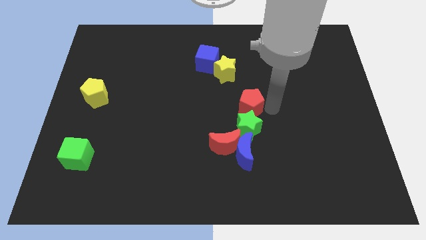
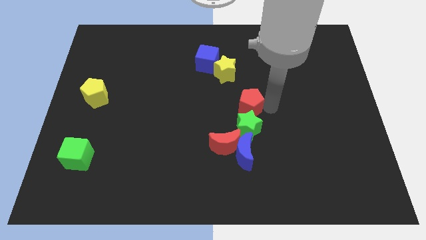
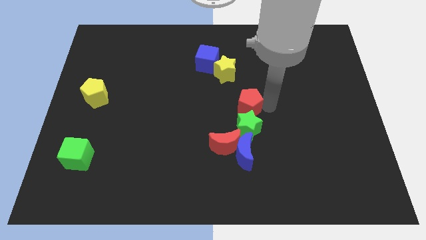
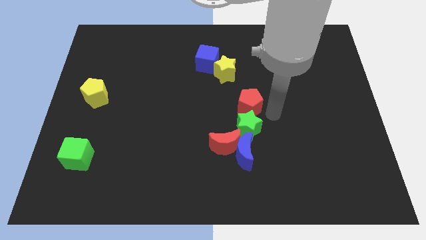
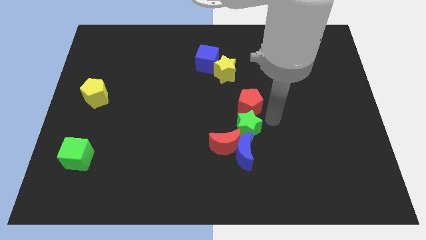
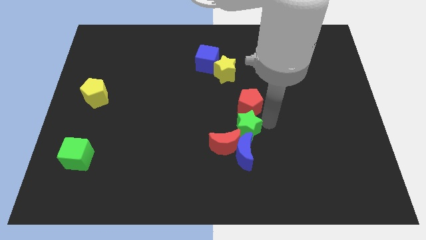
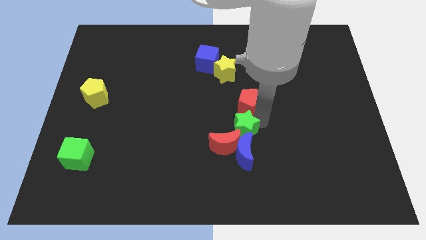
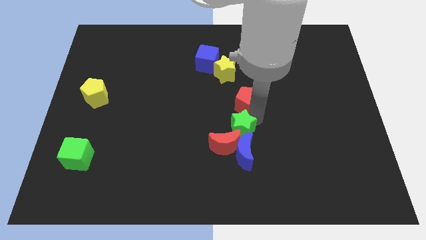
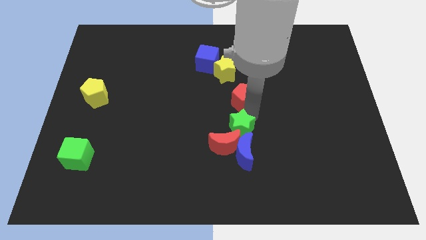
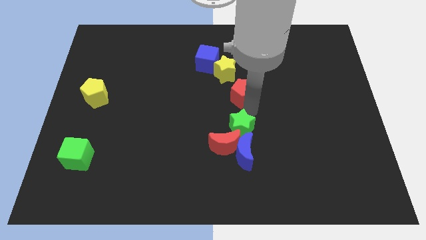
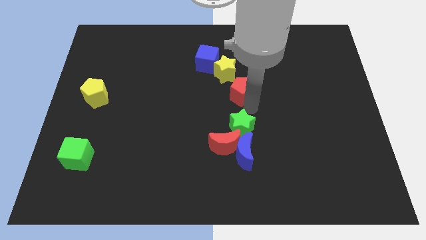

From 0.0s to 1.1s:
separate red pentagon and green star

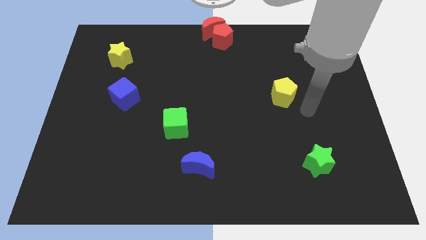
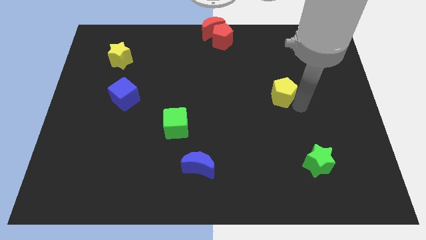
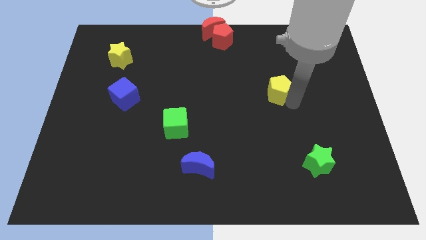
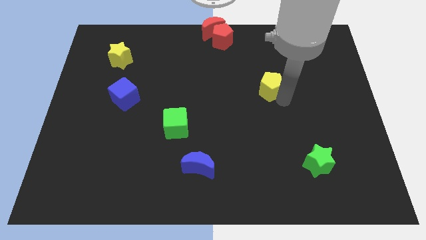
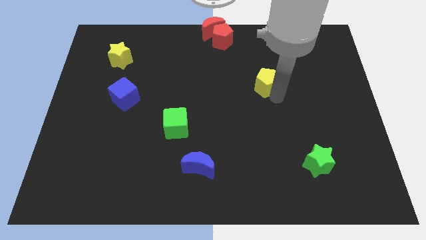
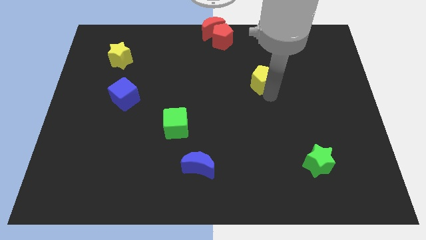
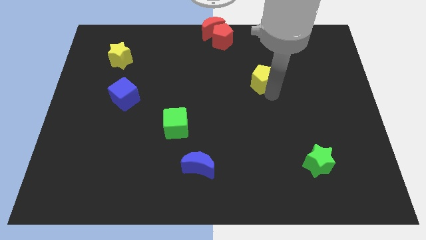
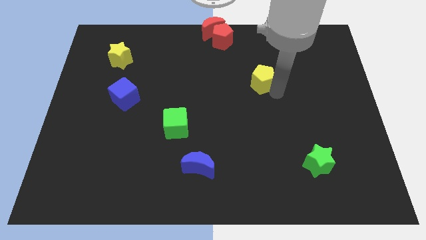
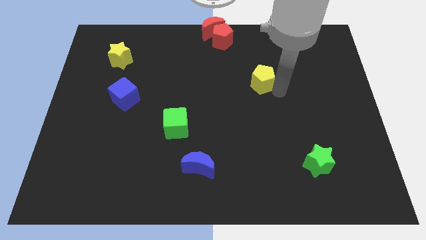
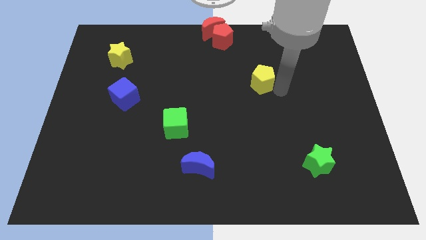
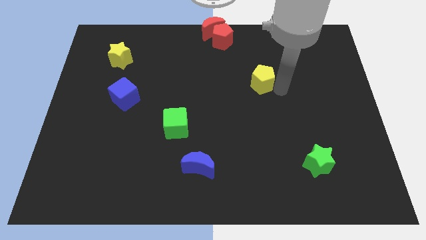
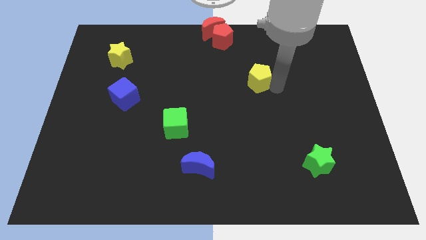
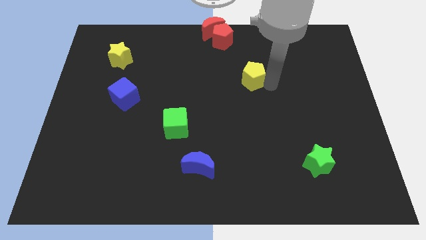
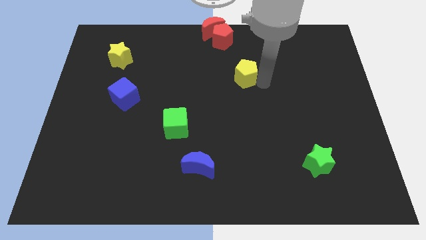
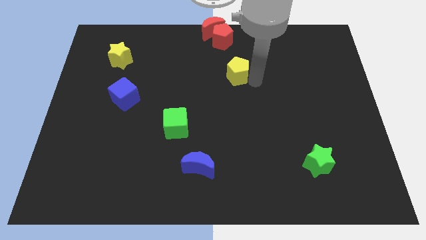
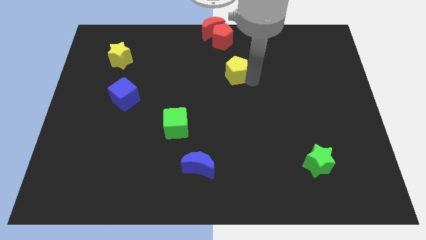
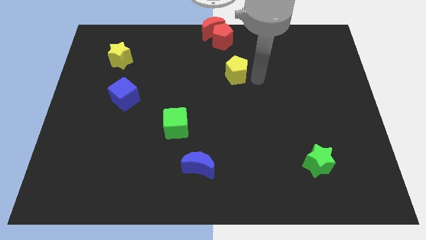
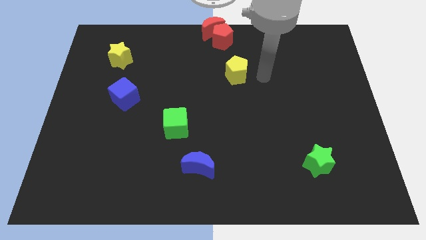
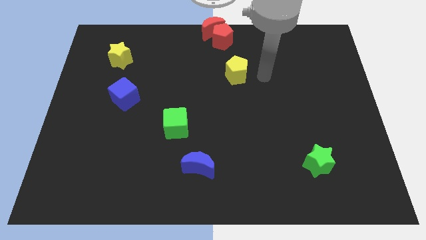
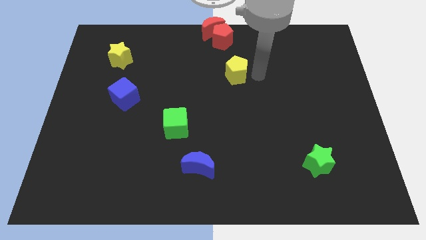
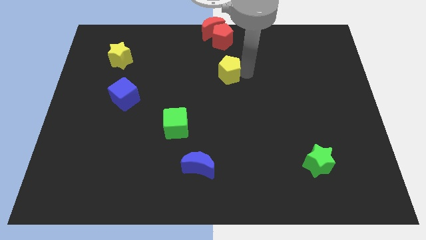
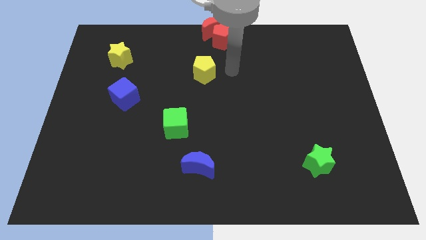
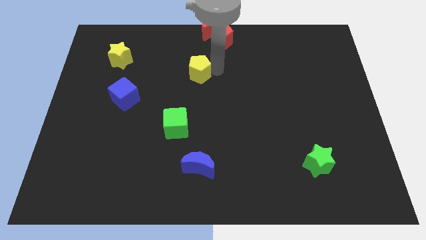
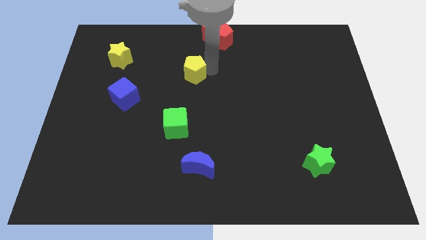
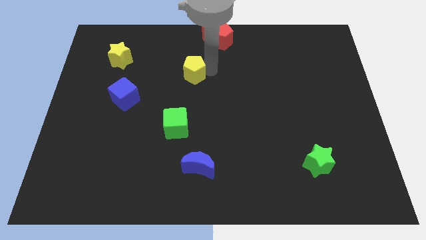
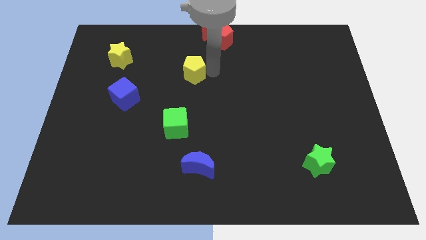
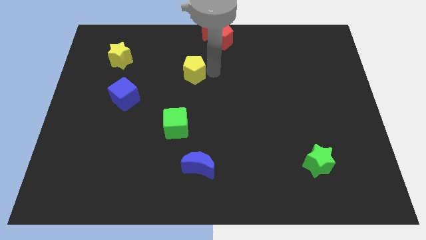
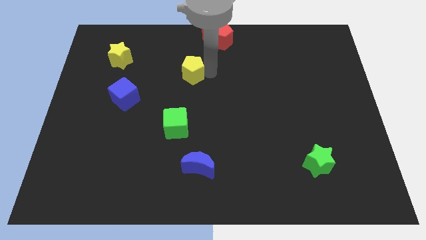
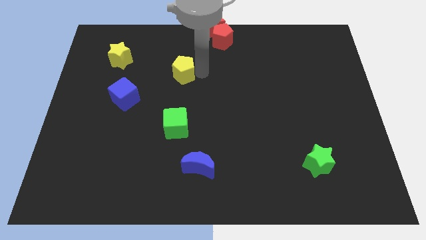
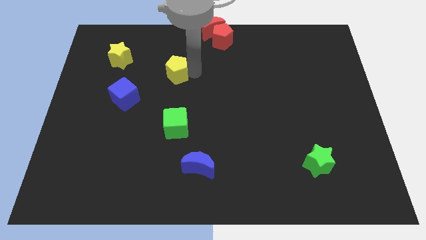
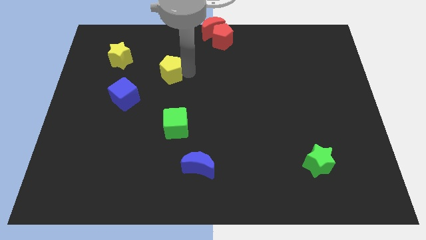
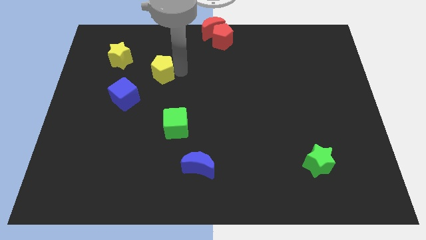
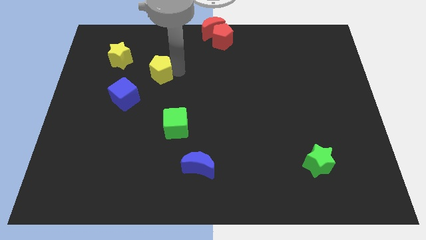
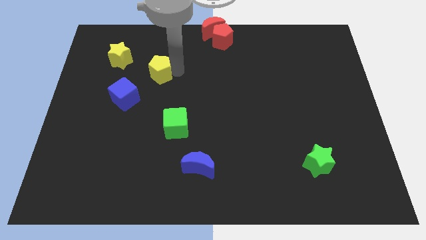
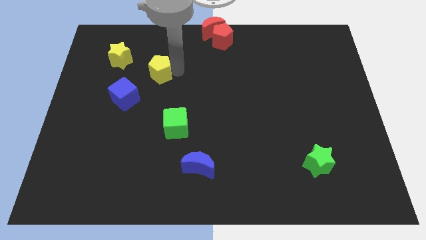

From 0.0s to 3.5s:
place the yellow pentagon in between the red pentagon and blue cube

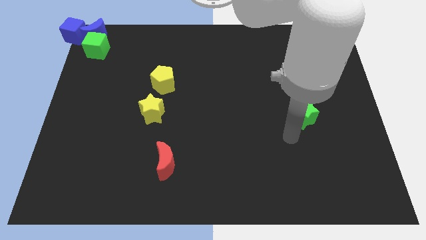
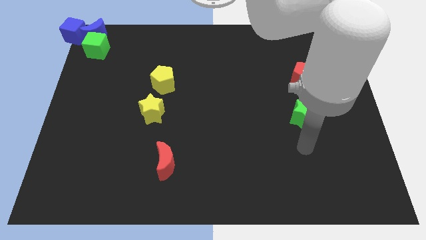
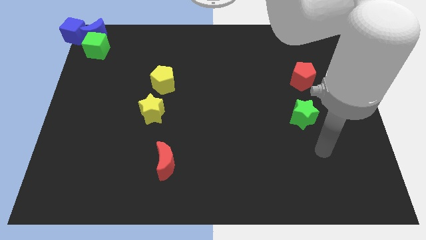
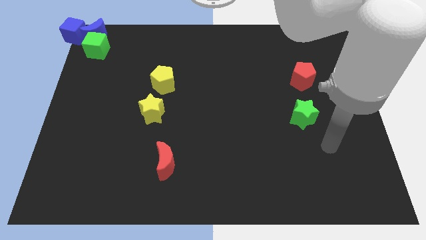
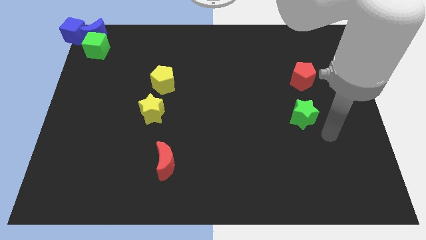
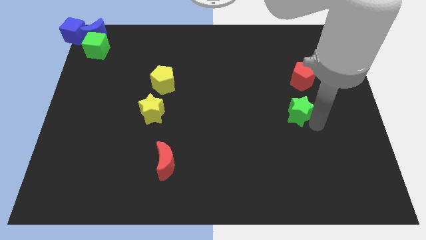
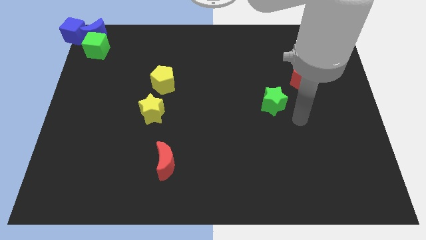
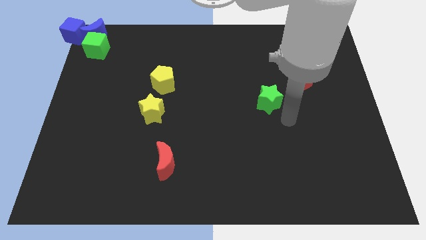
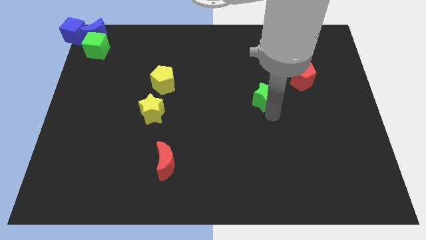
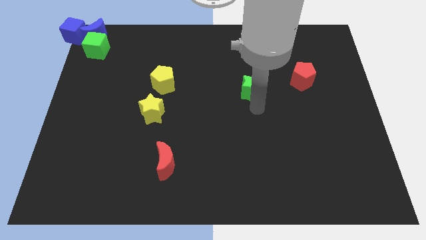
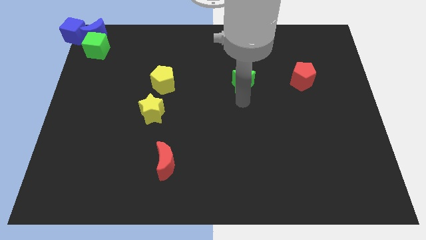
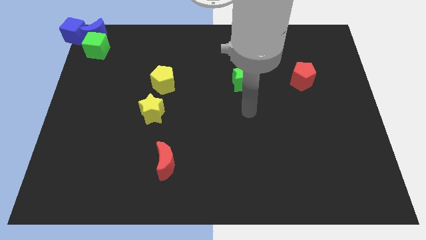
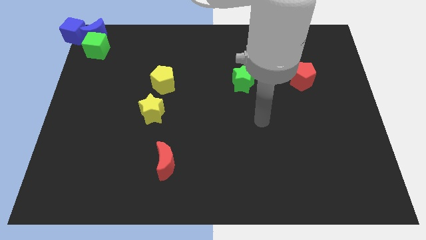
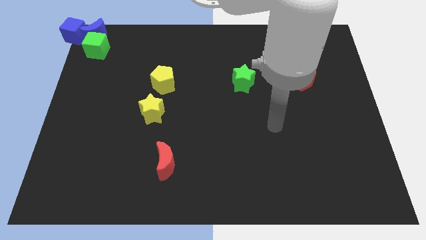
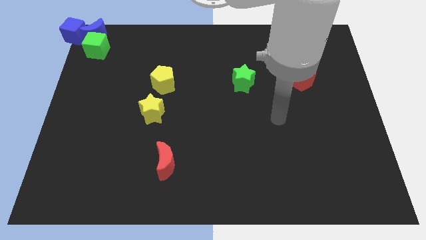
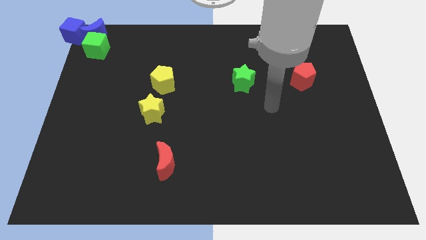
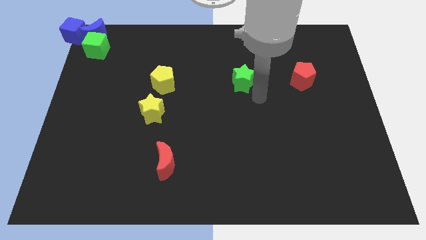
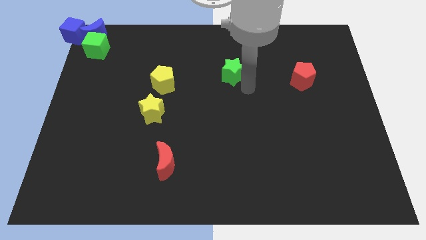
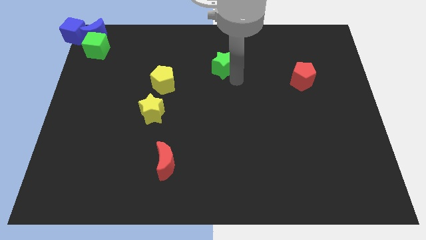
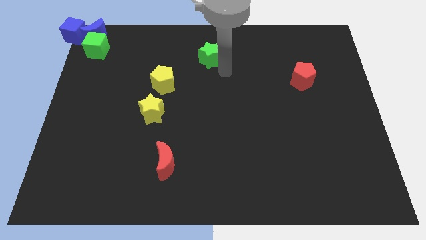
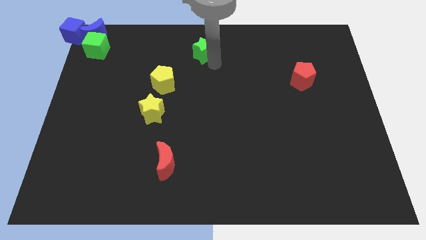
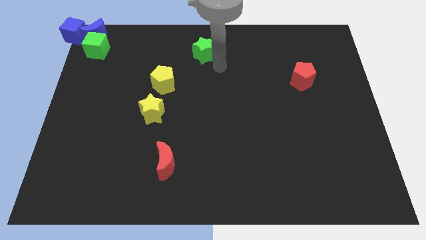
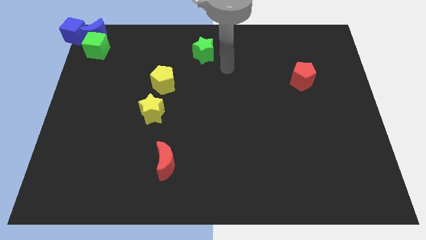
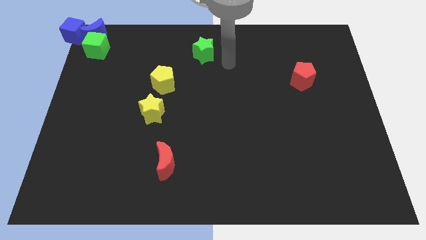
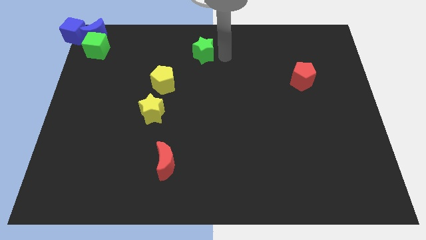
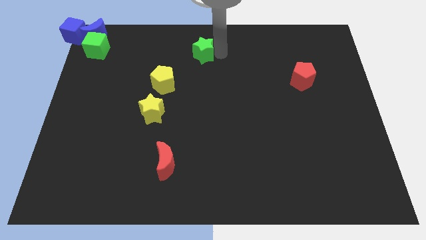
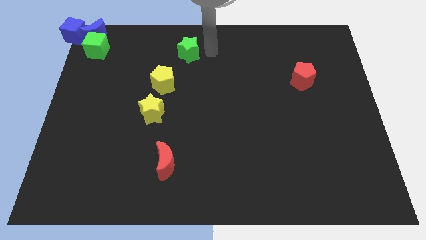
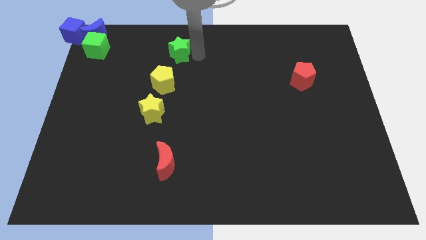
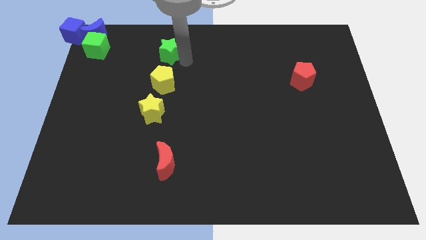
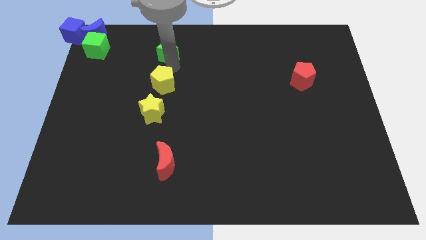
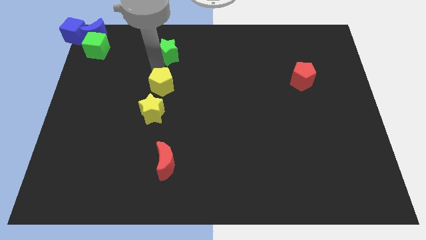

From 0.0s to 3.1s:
place the green star at the top of yellow pentagon

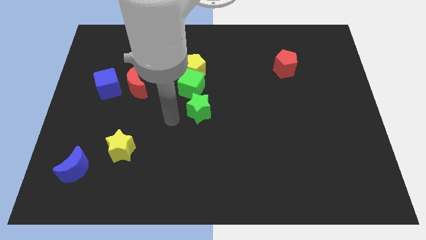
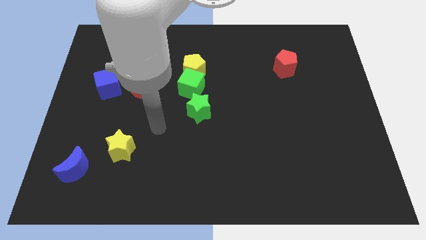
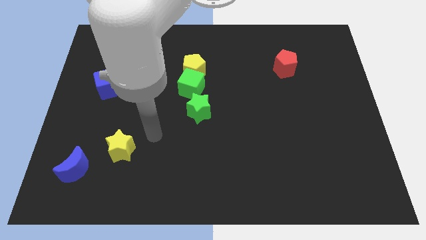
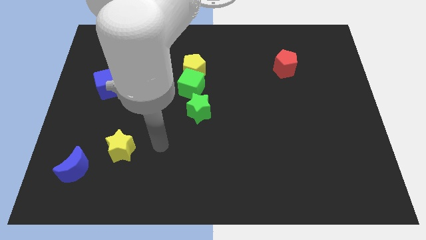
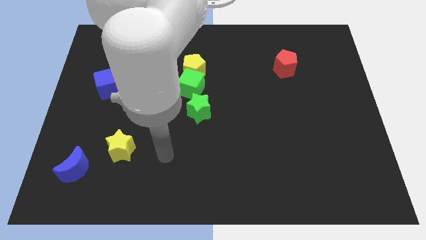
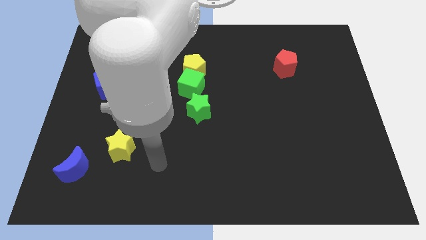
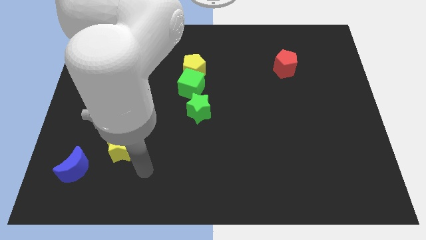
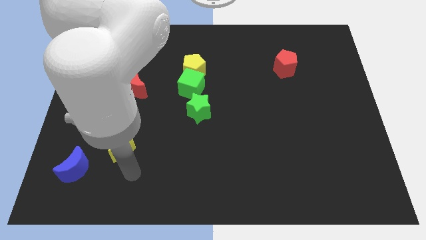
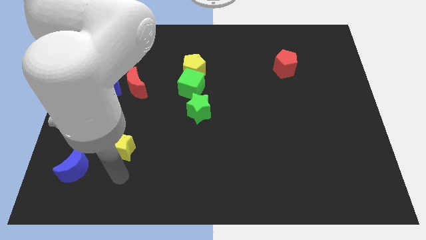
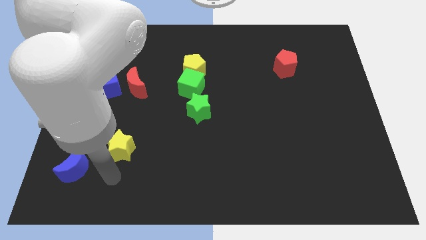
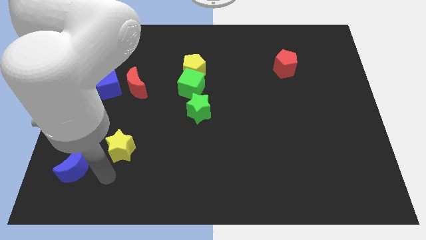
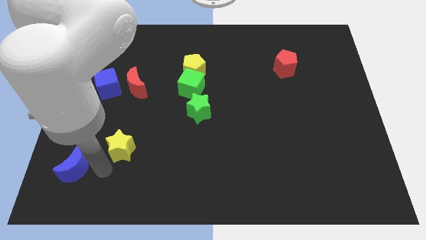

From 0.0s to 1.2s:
place your arm to the bottom of the yellow star

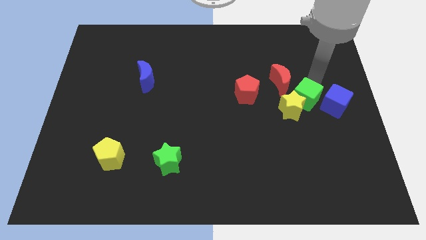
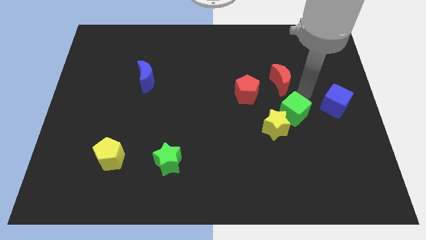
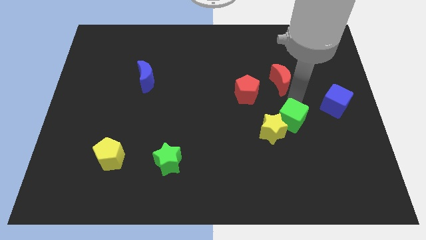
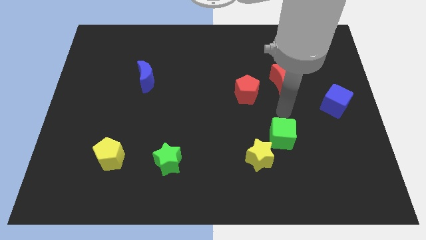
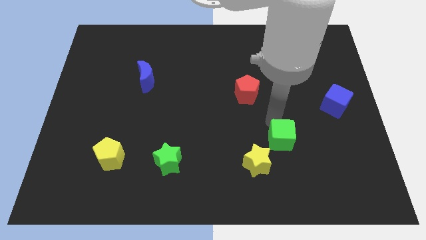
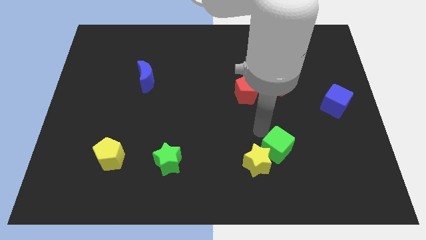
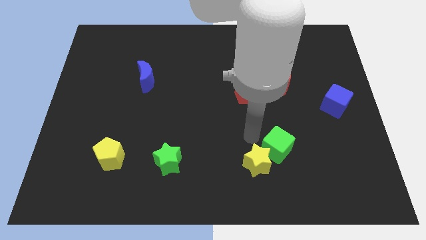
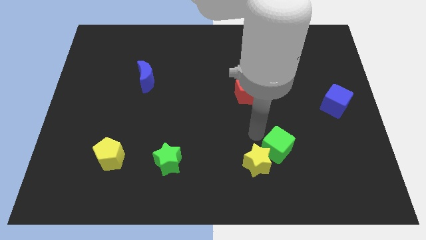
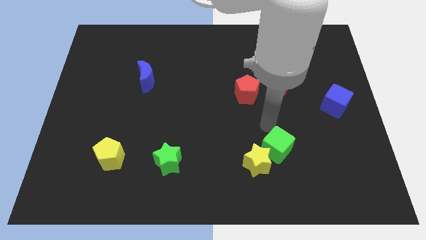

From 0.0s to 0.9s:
move the green cube and the yellow star to the bottom of the board
